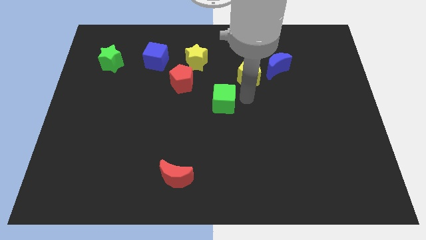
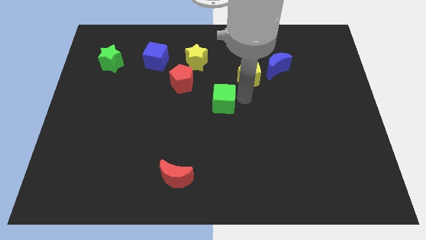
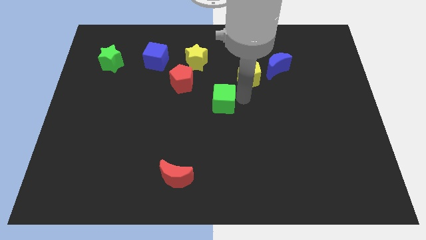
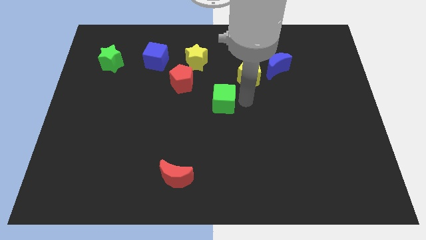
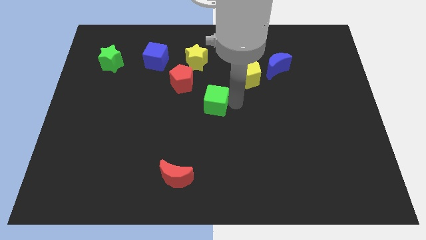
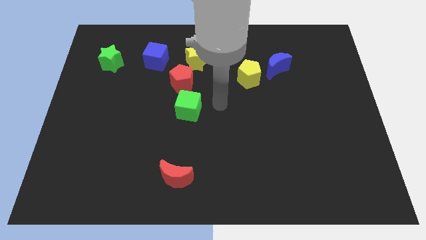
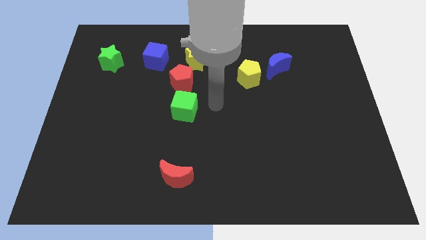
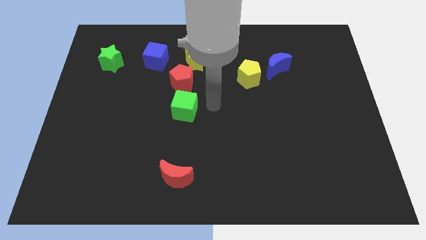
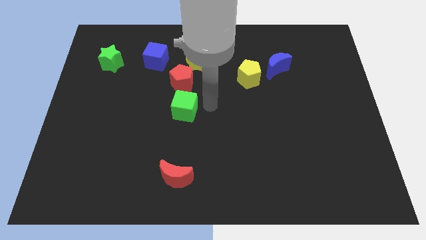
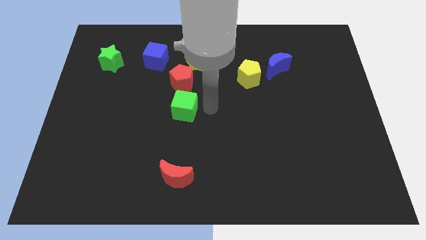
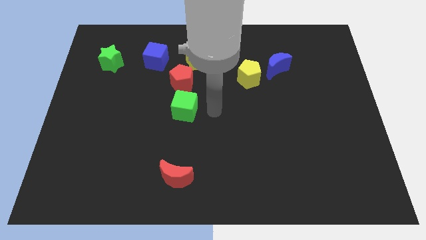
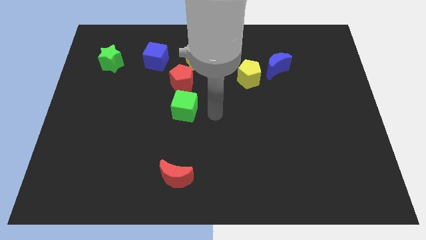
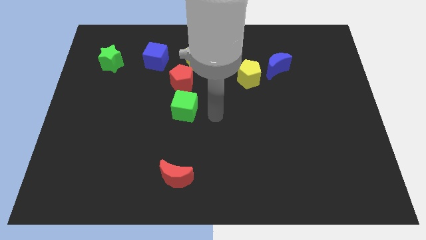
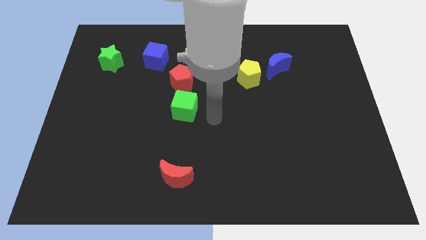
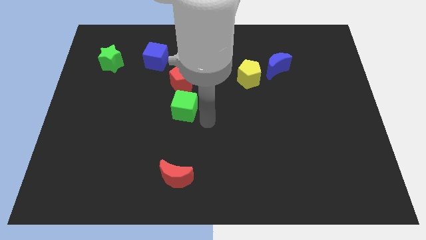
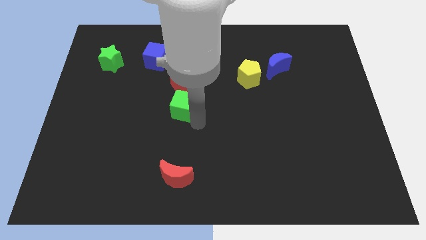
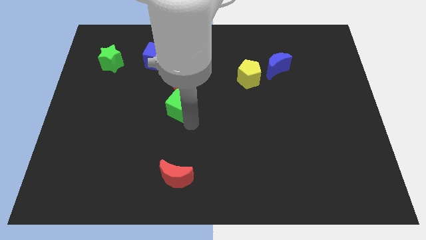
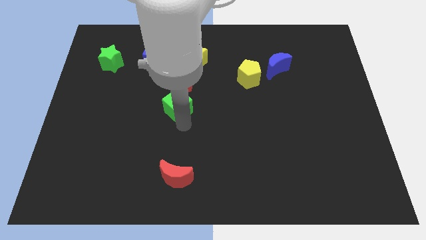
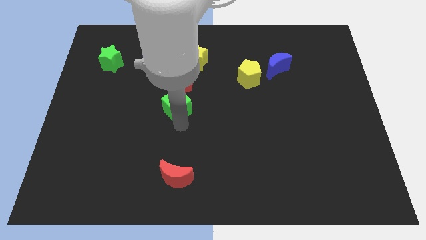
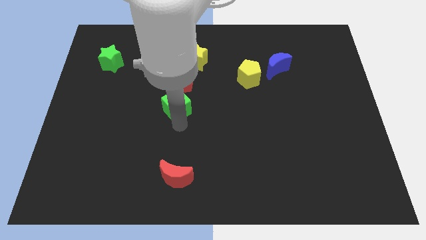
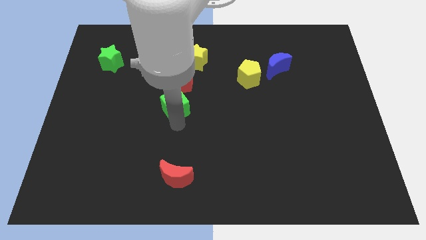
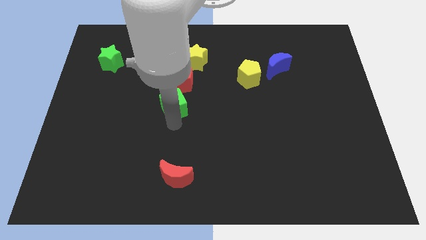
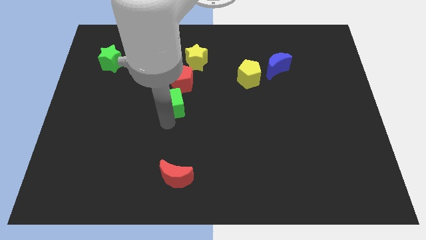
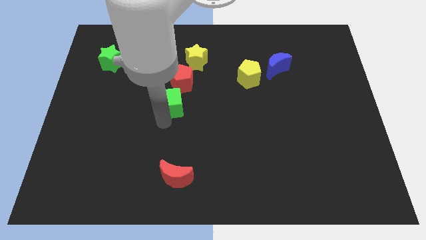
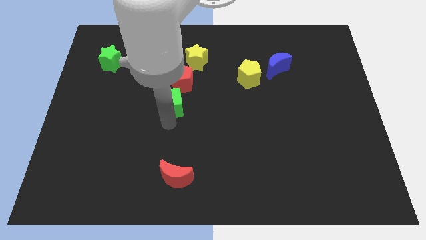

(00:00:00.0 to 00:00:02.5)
place green cube to the center

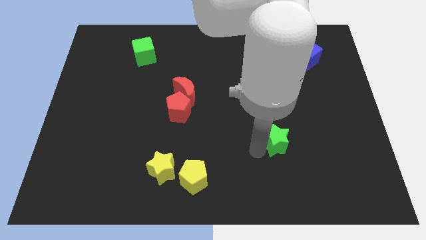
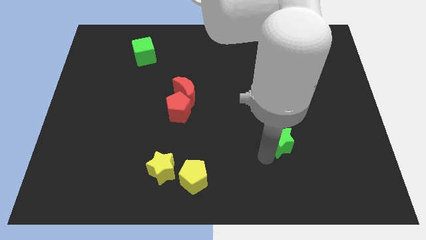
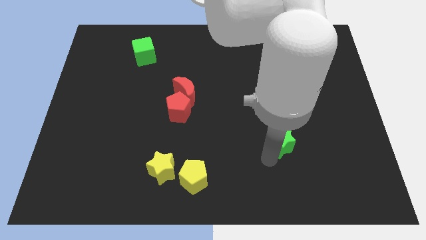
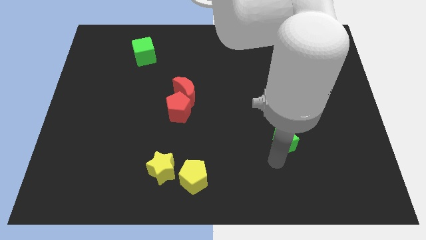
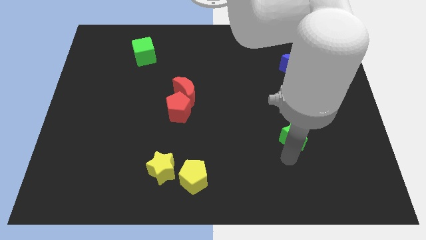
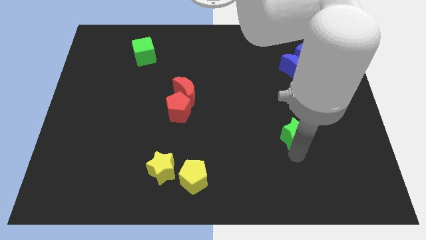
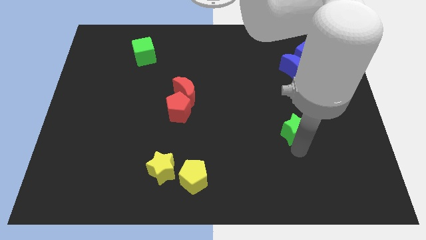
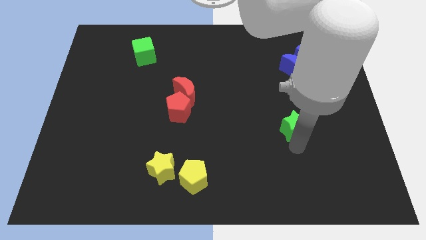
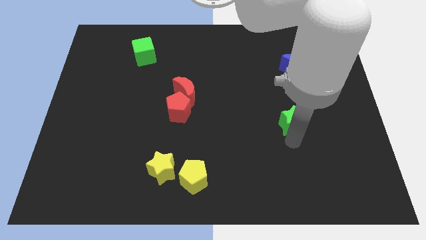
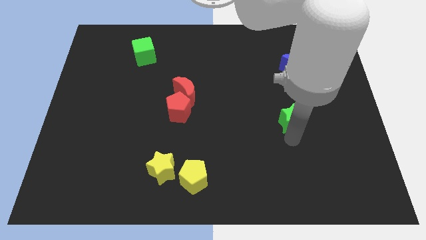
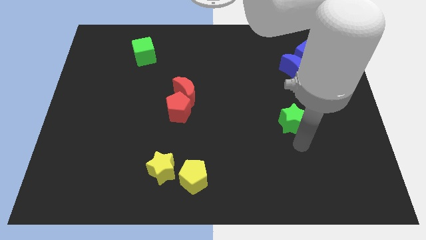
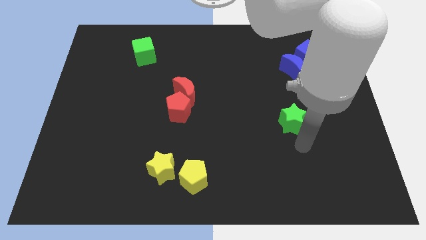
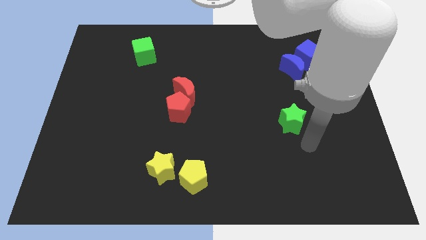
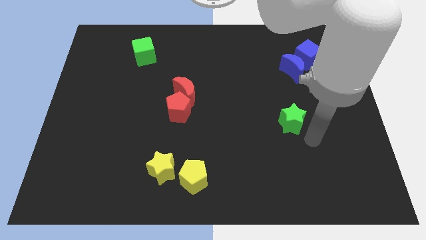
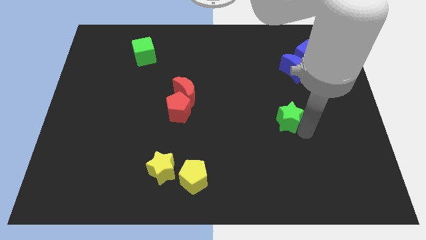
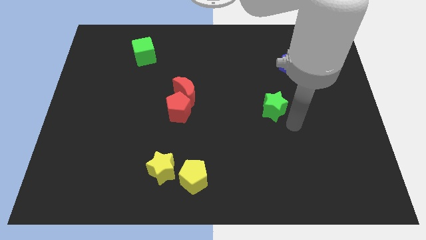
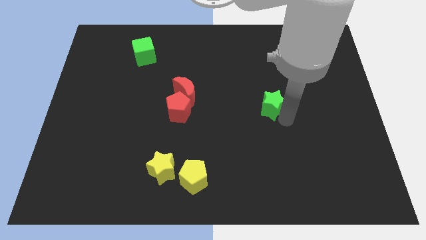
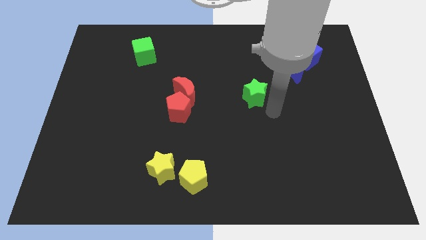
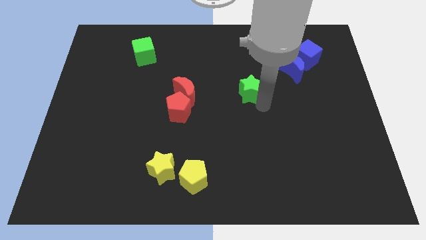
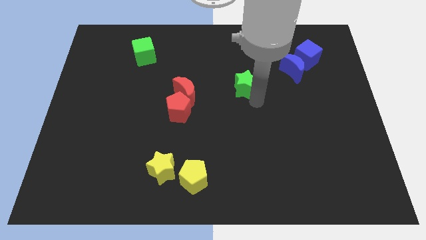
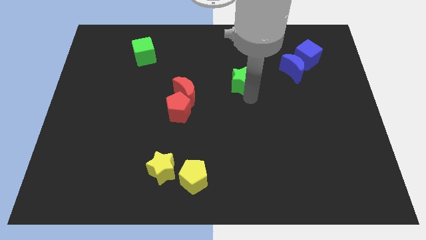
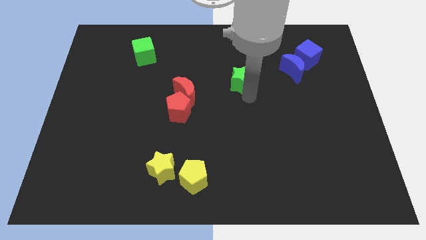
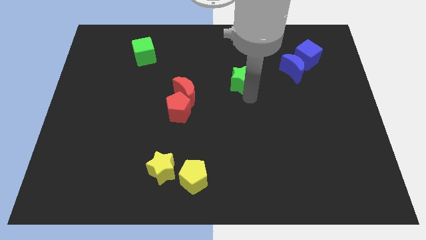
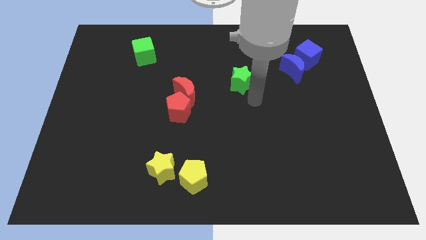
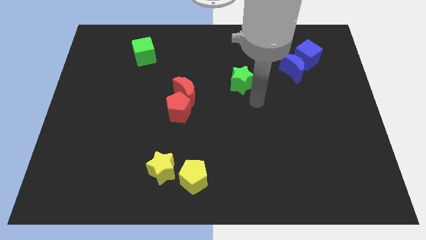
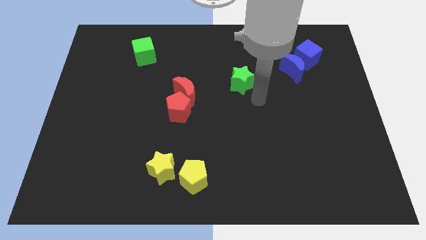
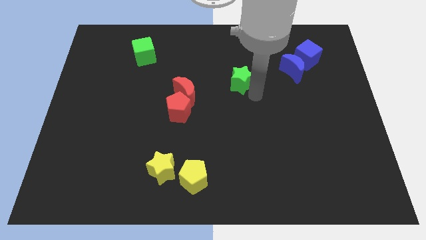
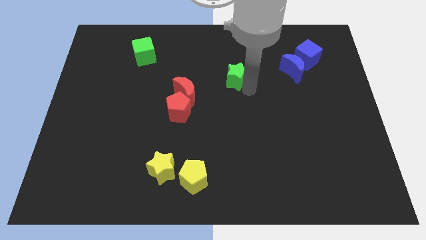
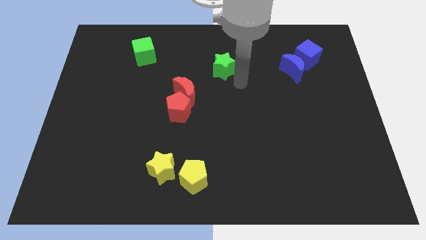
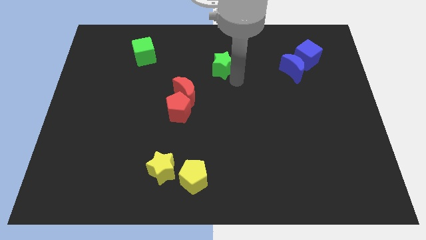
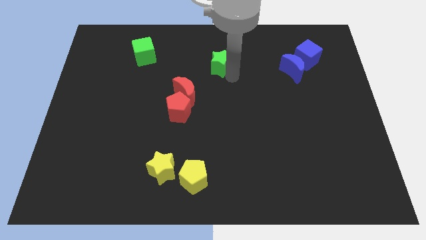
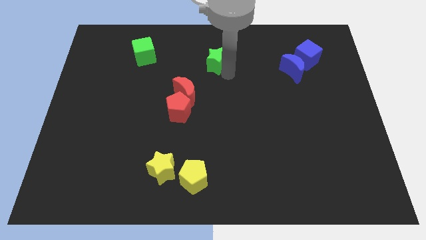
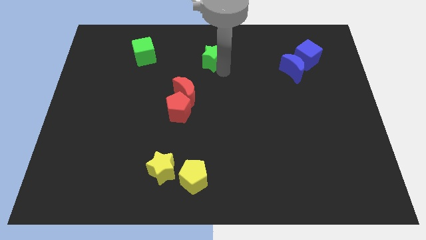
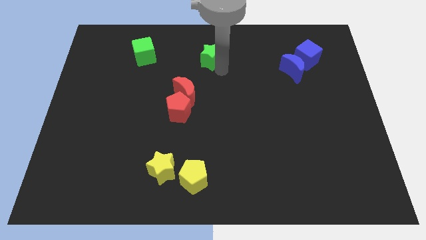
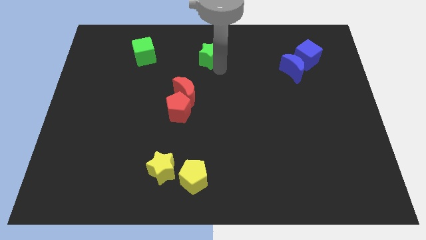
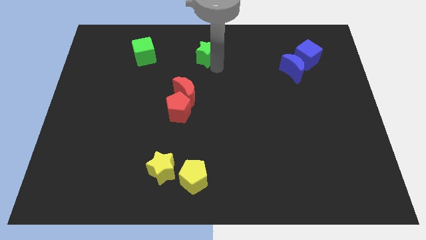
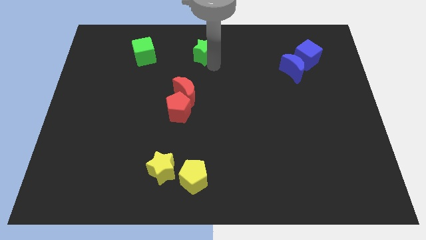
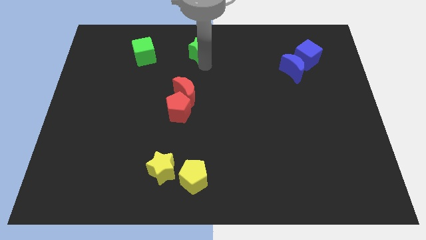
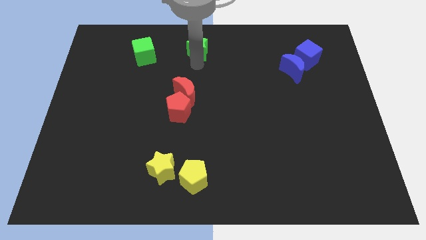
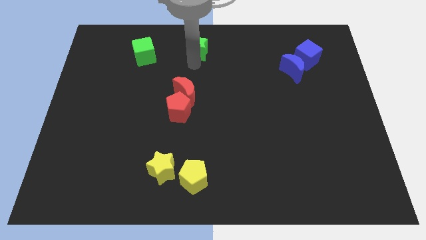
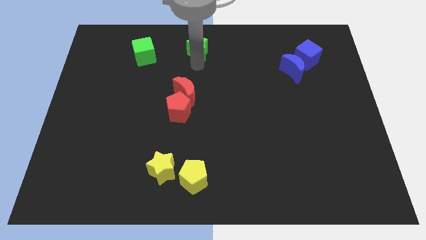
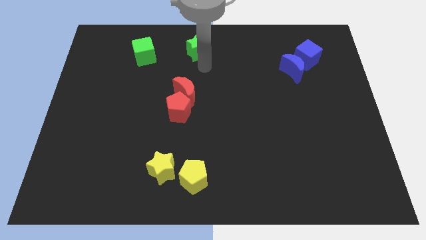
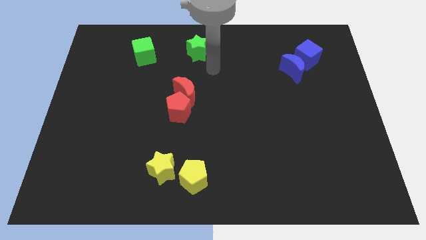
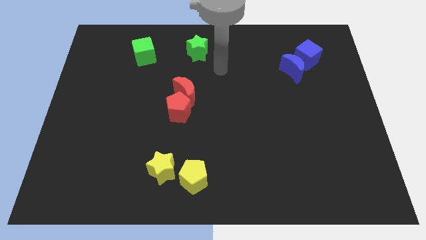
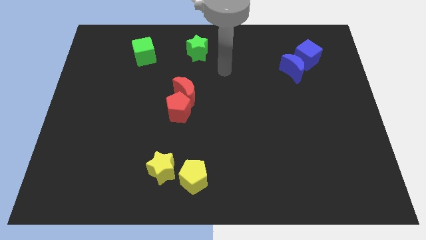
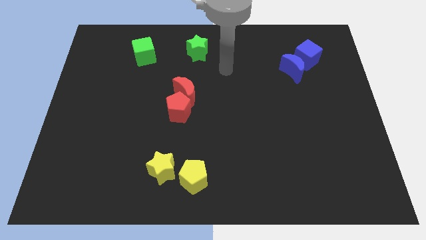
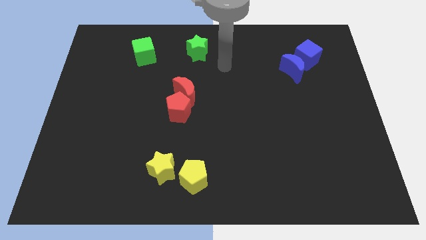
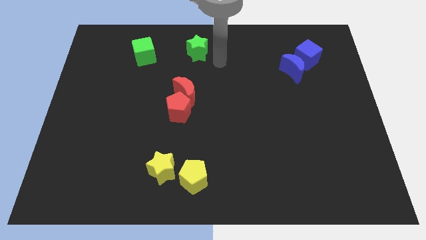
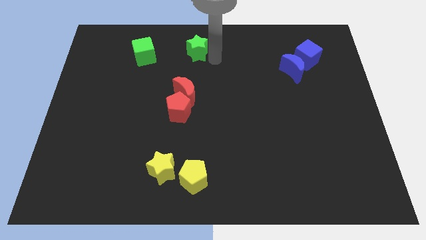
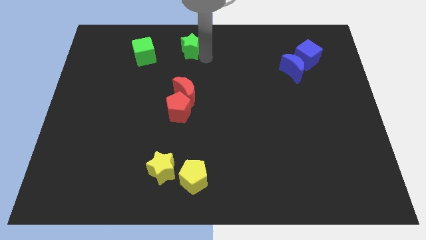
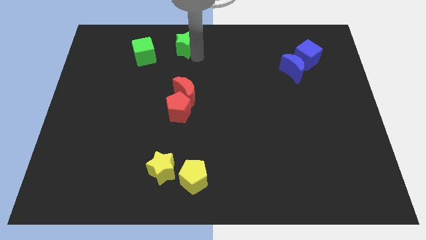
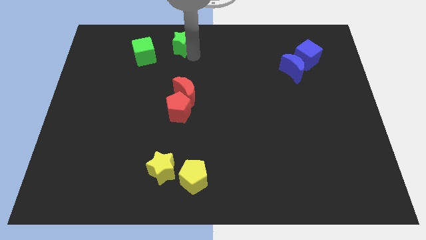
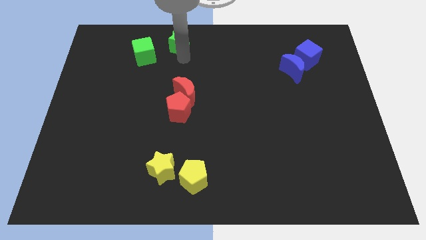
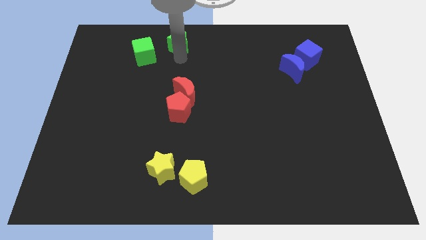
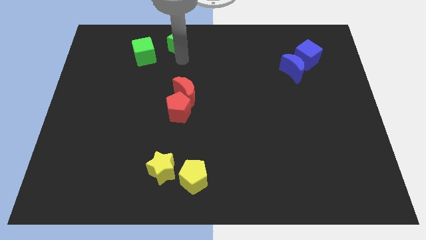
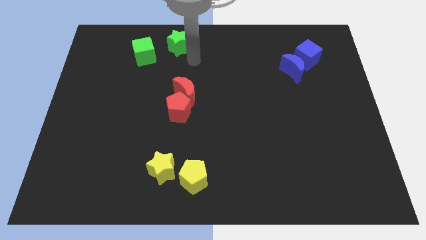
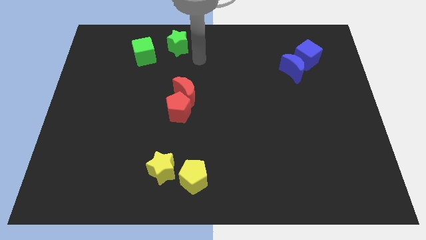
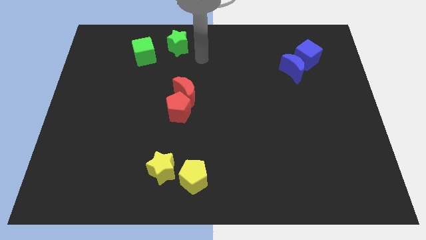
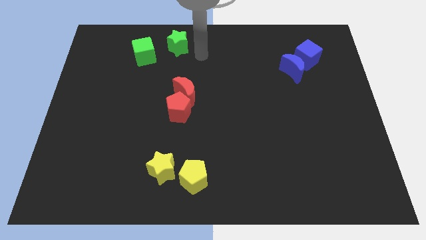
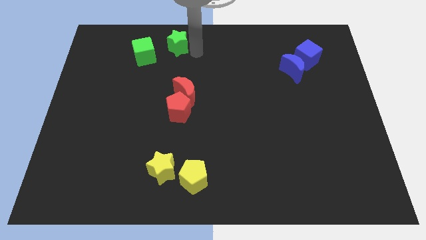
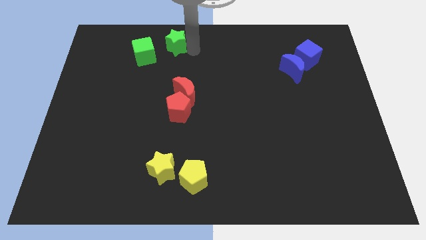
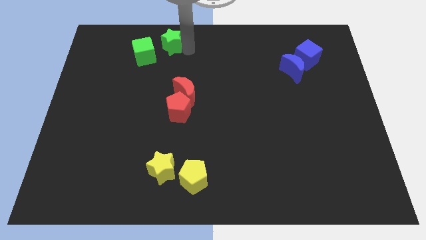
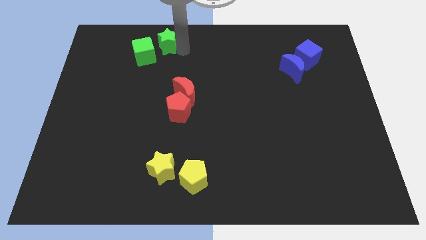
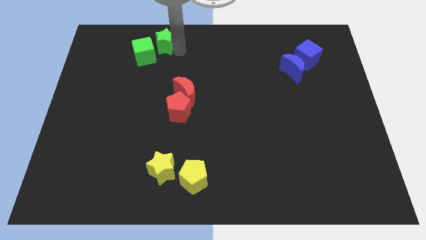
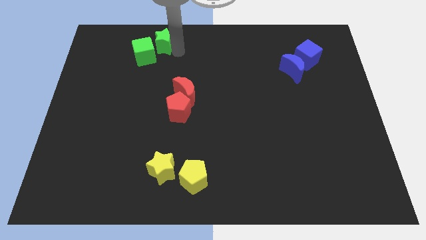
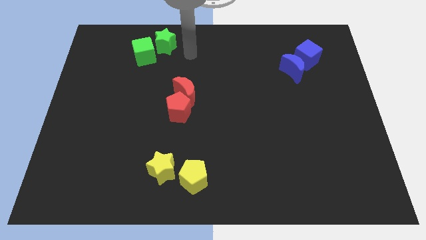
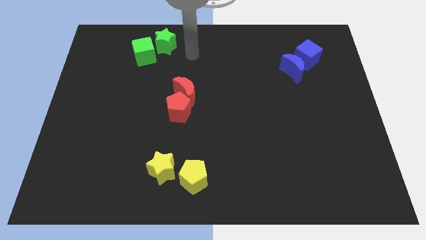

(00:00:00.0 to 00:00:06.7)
push the green star to the right side of the green cube
